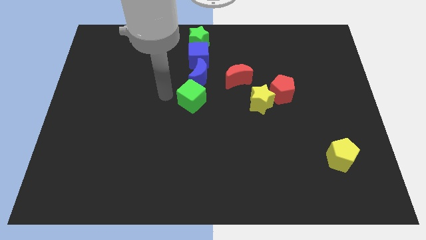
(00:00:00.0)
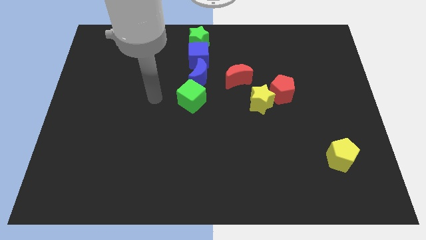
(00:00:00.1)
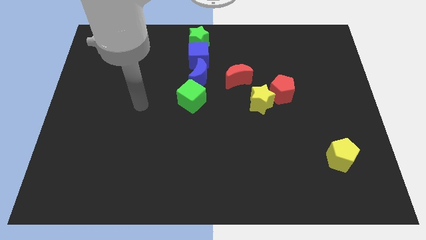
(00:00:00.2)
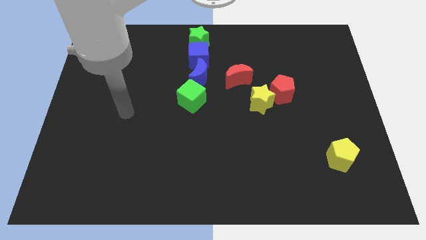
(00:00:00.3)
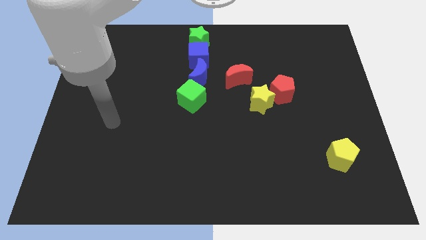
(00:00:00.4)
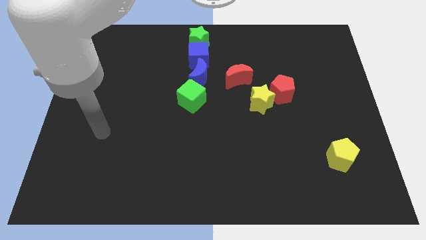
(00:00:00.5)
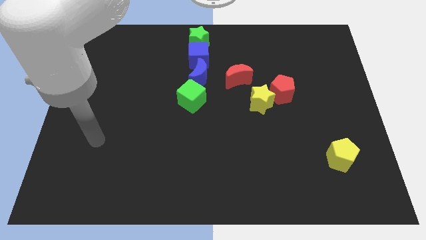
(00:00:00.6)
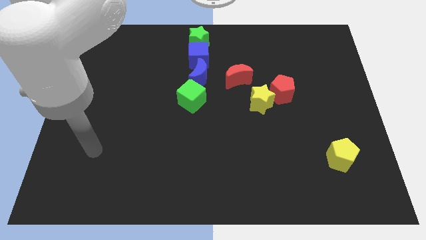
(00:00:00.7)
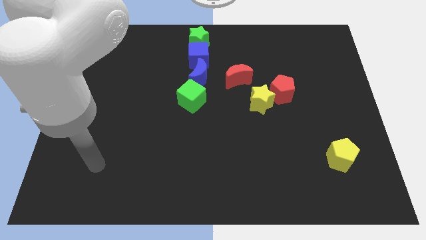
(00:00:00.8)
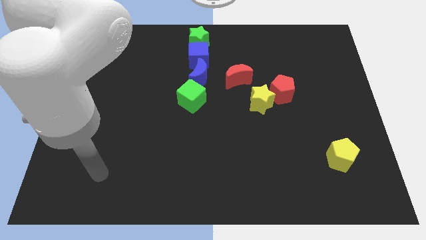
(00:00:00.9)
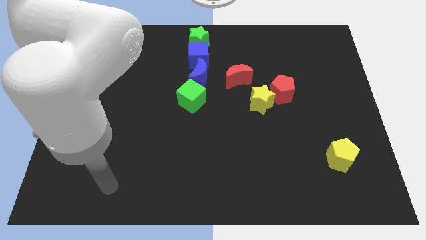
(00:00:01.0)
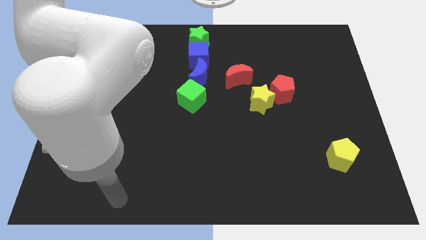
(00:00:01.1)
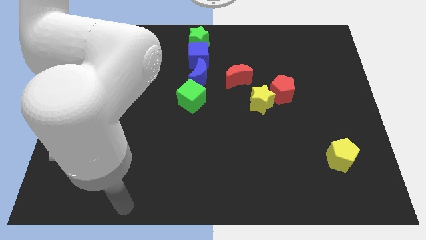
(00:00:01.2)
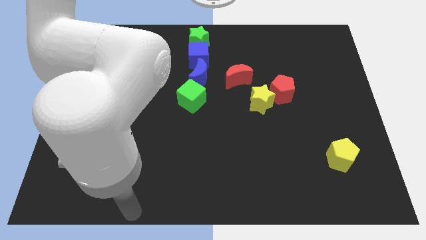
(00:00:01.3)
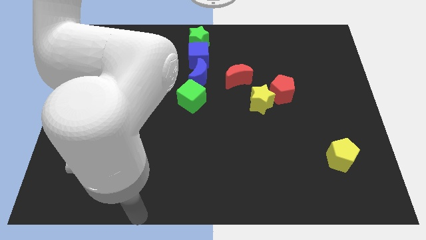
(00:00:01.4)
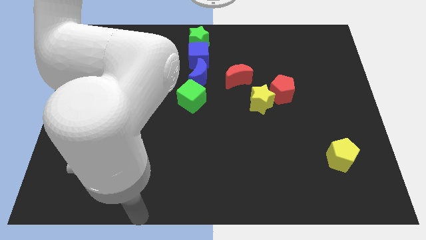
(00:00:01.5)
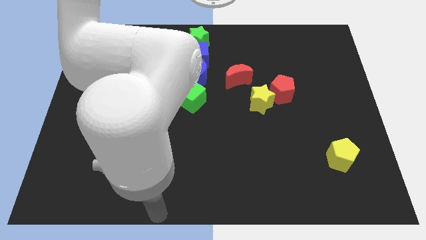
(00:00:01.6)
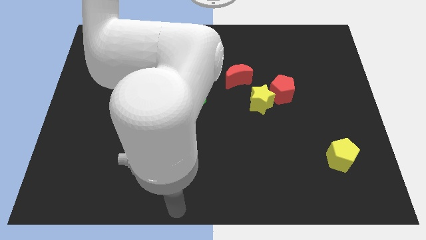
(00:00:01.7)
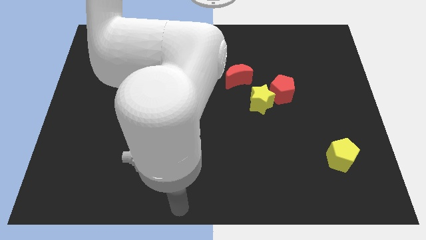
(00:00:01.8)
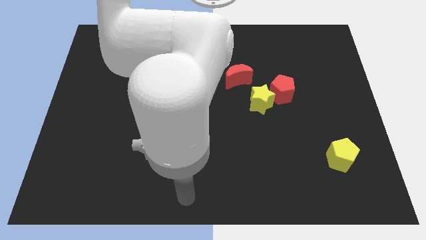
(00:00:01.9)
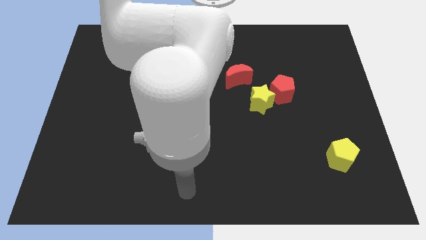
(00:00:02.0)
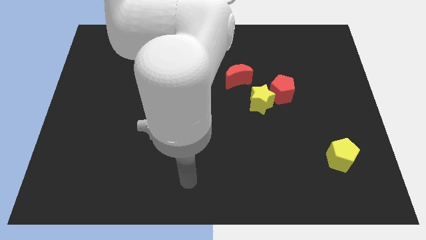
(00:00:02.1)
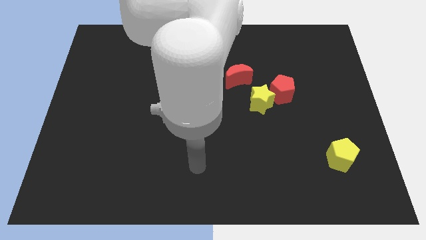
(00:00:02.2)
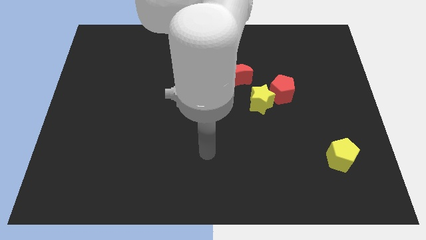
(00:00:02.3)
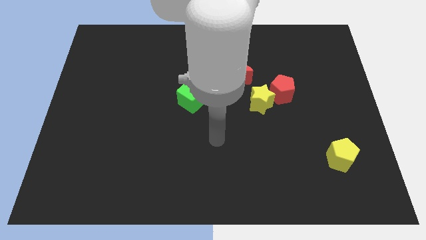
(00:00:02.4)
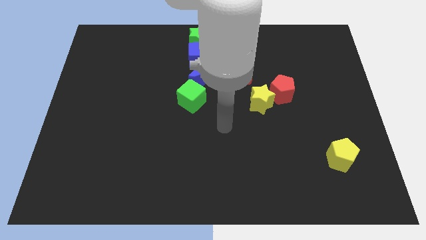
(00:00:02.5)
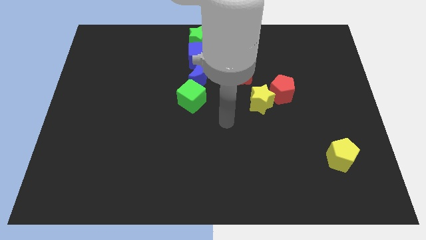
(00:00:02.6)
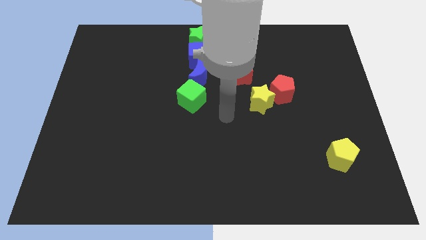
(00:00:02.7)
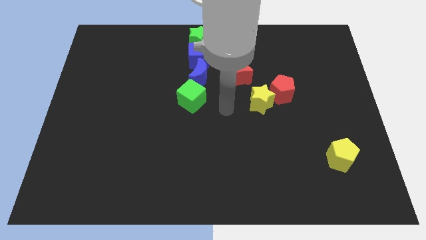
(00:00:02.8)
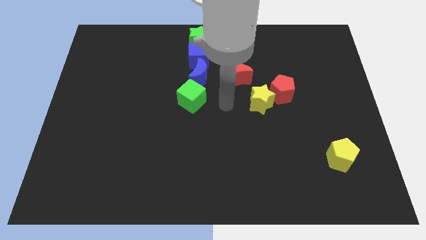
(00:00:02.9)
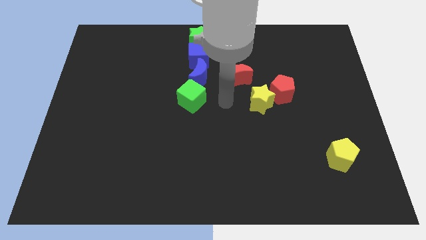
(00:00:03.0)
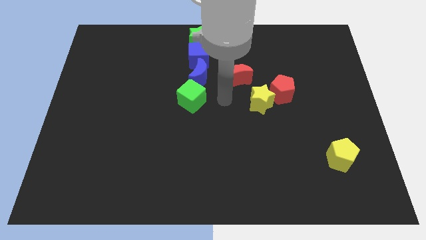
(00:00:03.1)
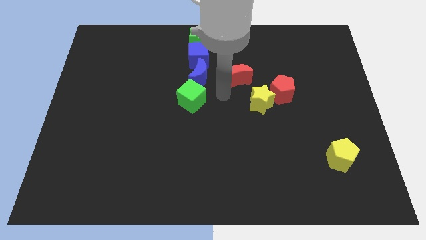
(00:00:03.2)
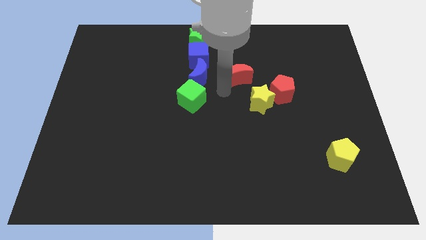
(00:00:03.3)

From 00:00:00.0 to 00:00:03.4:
touch the bottom of red crescent

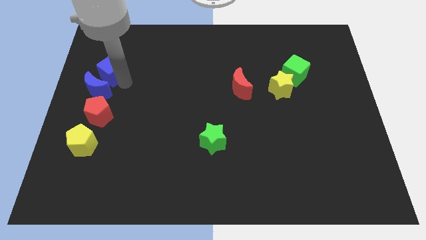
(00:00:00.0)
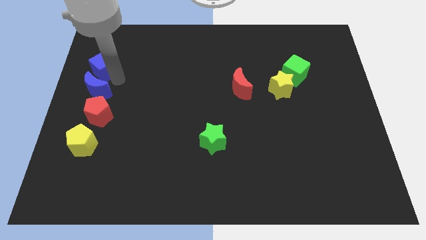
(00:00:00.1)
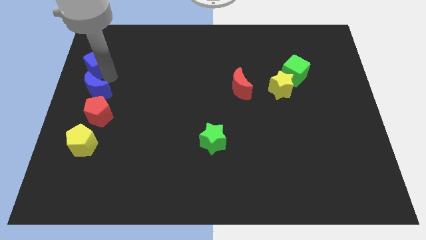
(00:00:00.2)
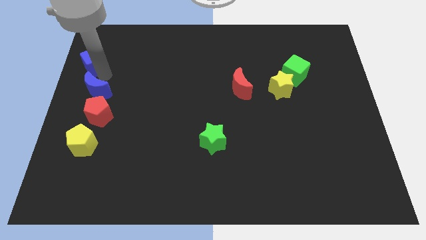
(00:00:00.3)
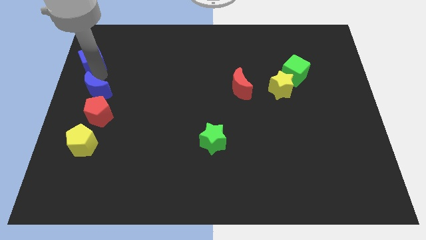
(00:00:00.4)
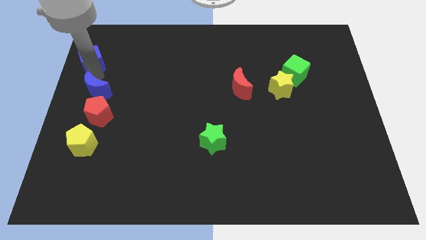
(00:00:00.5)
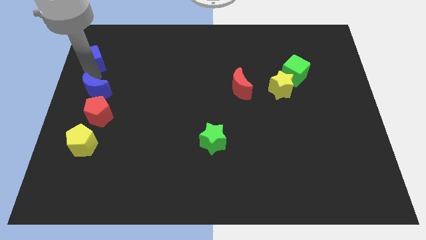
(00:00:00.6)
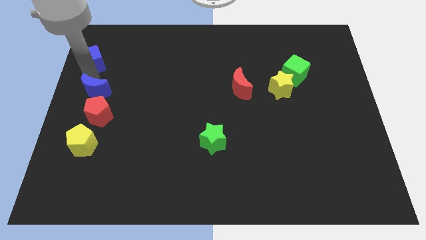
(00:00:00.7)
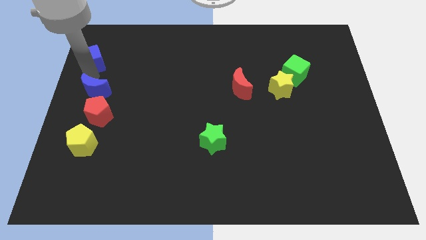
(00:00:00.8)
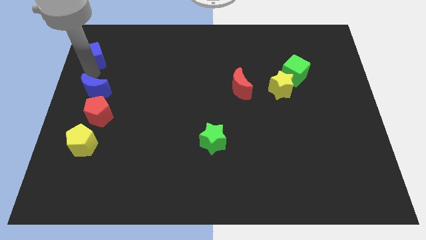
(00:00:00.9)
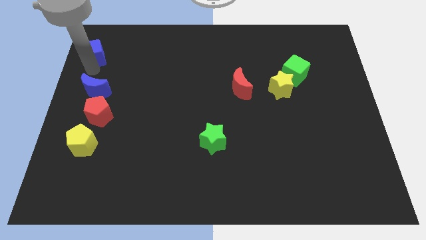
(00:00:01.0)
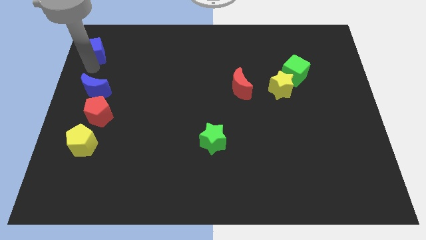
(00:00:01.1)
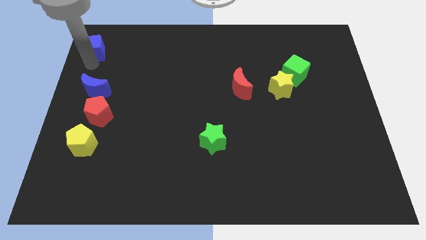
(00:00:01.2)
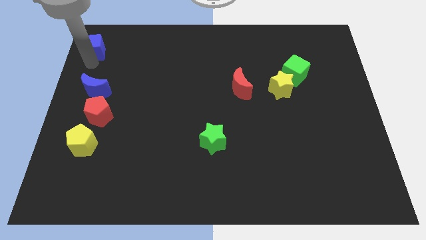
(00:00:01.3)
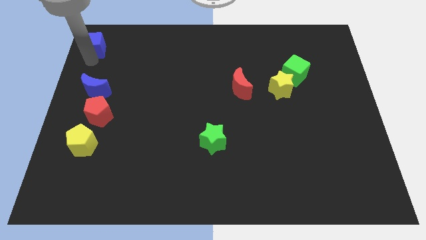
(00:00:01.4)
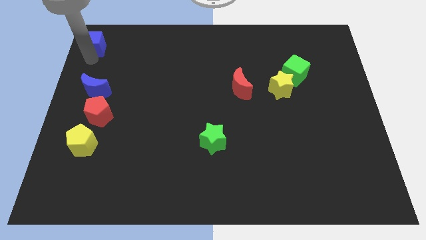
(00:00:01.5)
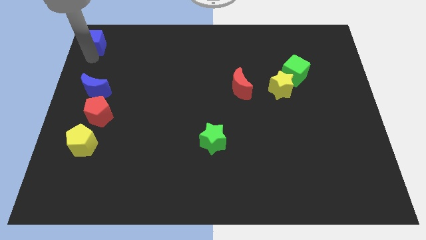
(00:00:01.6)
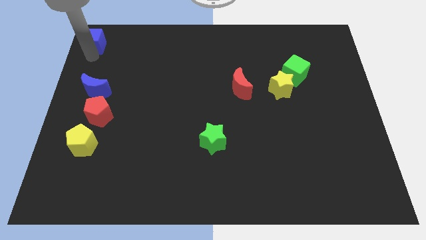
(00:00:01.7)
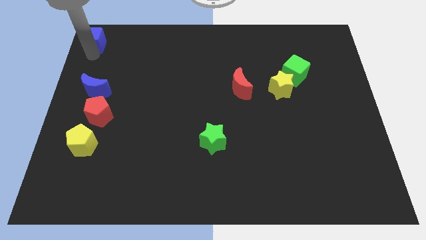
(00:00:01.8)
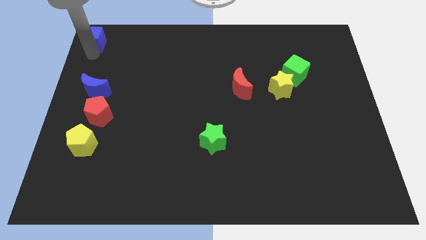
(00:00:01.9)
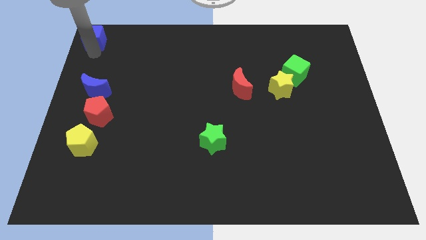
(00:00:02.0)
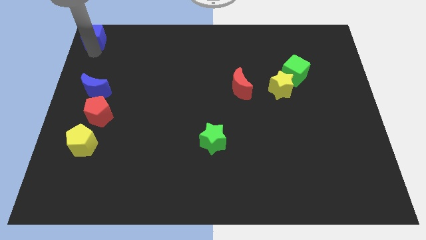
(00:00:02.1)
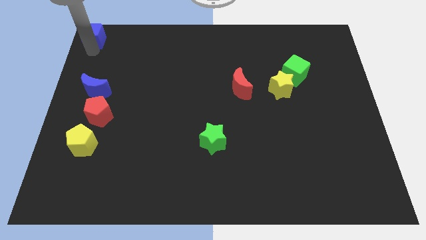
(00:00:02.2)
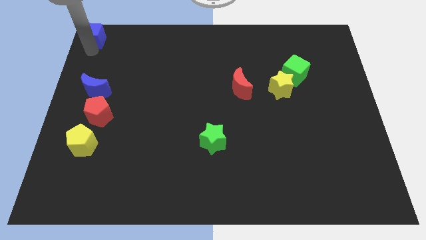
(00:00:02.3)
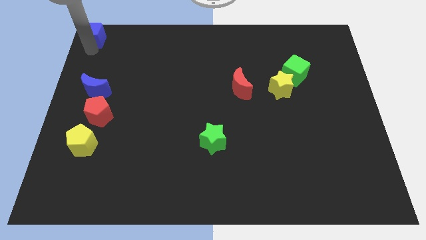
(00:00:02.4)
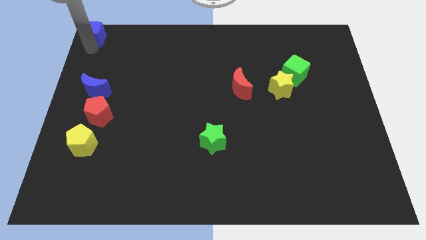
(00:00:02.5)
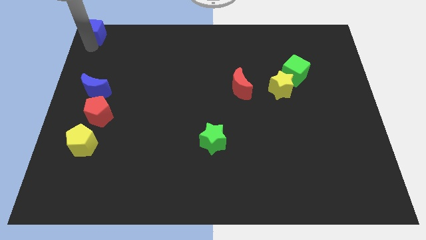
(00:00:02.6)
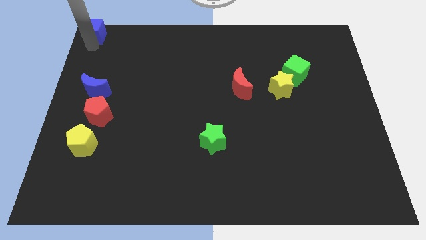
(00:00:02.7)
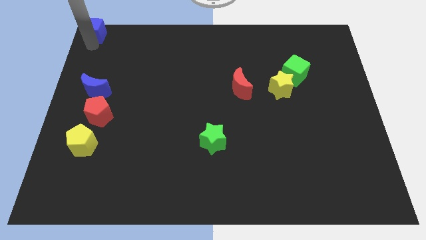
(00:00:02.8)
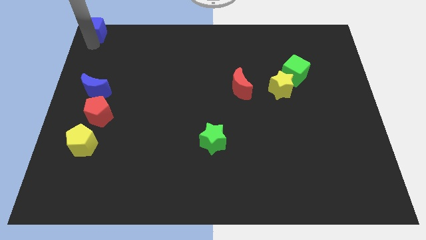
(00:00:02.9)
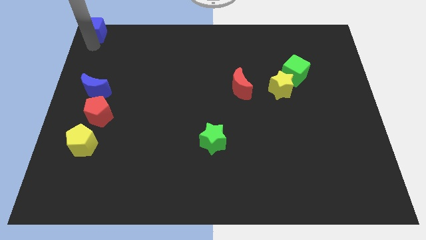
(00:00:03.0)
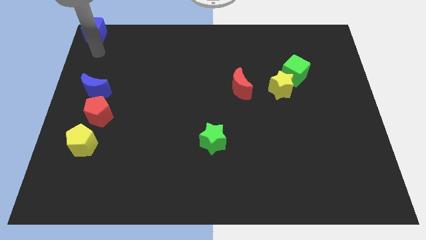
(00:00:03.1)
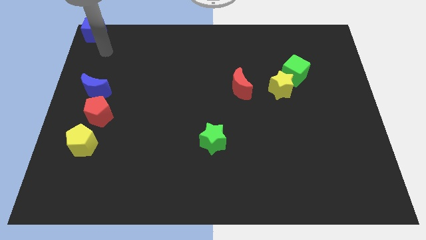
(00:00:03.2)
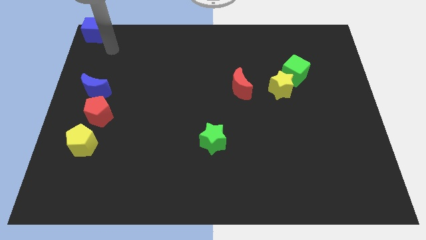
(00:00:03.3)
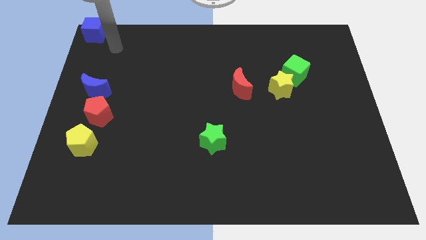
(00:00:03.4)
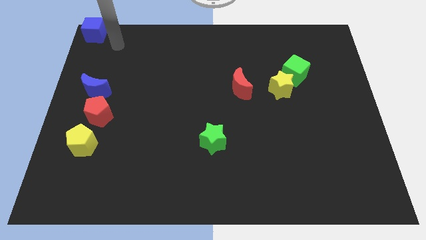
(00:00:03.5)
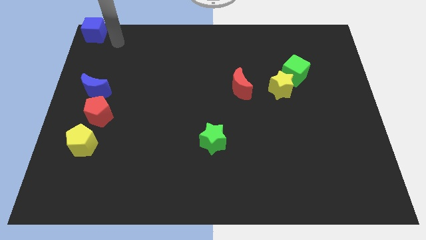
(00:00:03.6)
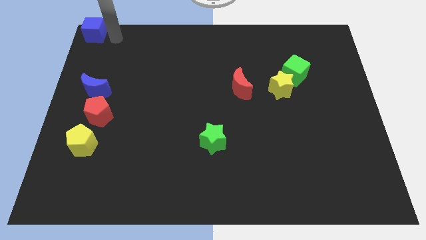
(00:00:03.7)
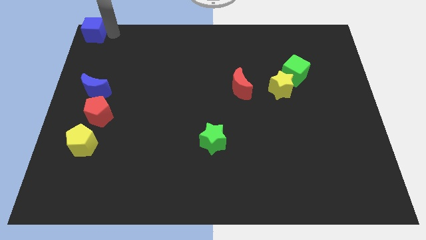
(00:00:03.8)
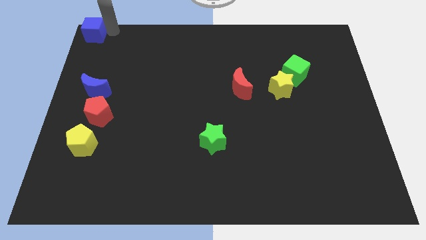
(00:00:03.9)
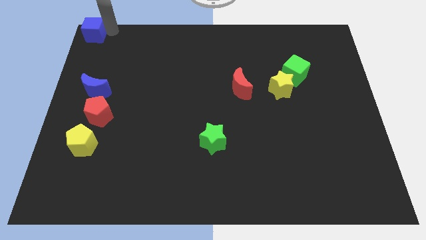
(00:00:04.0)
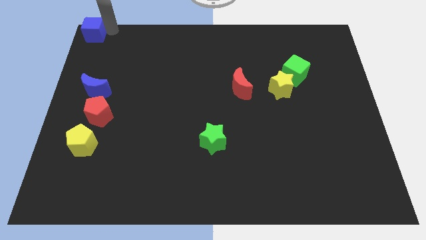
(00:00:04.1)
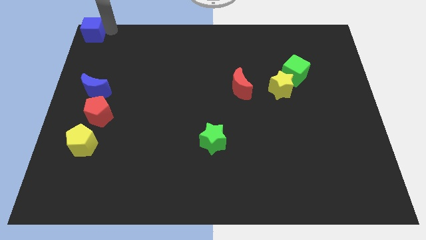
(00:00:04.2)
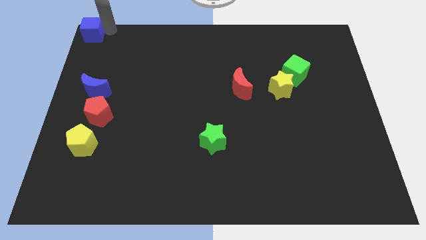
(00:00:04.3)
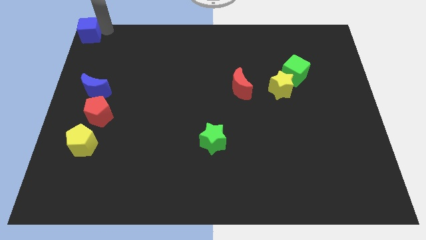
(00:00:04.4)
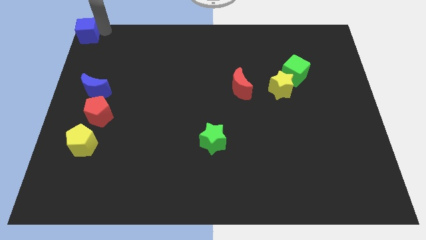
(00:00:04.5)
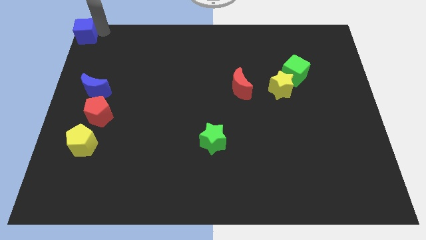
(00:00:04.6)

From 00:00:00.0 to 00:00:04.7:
place the blue cube at the top left corner

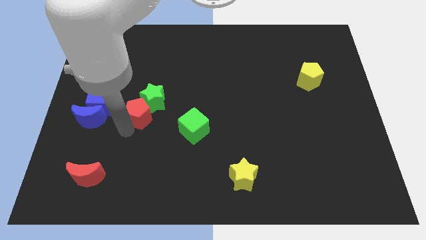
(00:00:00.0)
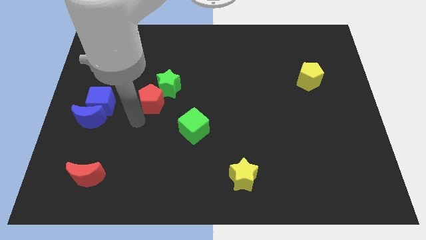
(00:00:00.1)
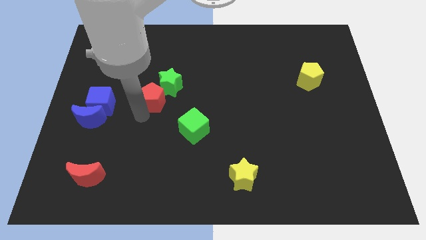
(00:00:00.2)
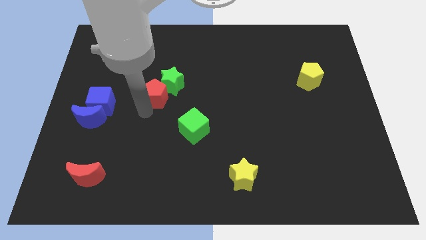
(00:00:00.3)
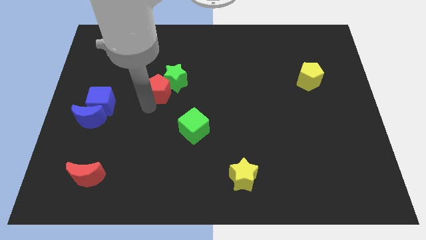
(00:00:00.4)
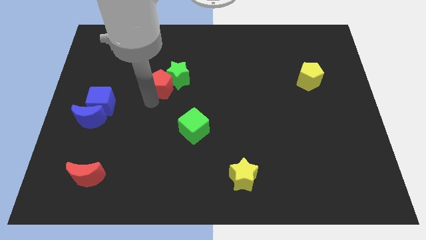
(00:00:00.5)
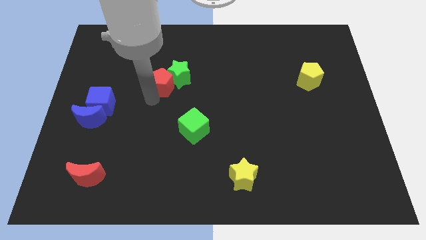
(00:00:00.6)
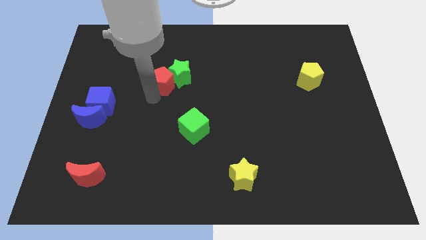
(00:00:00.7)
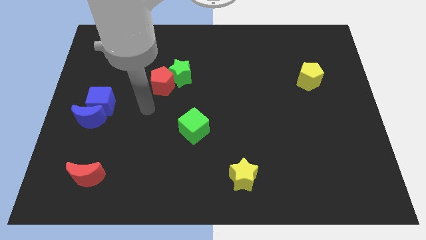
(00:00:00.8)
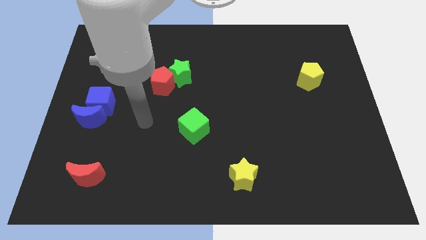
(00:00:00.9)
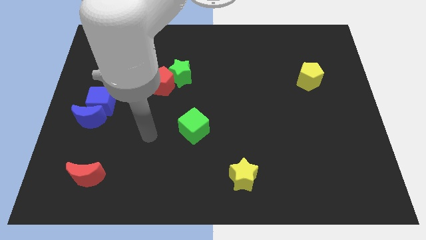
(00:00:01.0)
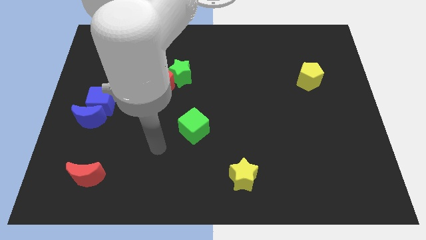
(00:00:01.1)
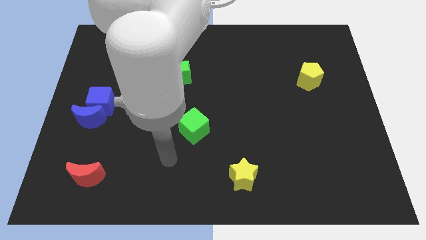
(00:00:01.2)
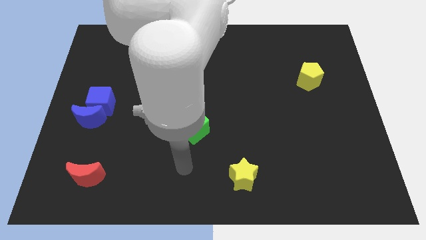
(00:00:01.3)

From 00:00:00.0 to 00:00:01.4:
move the green star and the red pentagon towards the top center of the board
